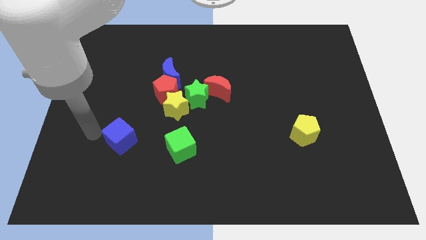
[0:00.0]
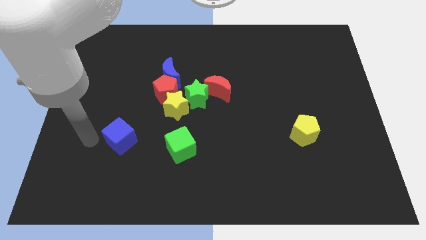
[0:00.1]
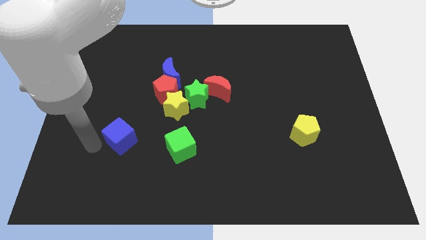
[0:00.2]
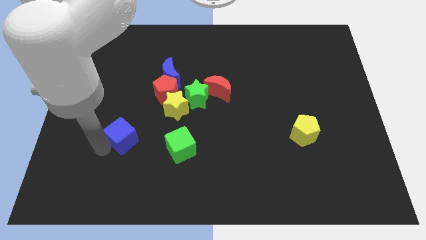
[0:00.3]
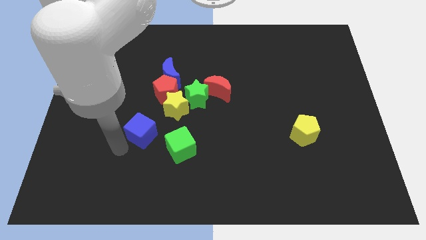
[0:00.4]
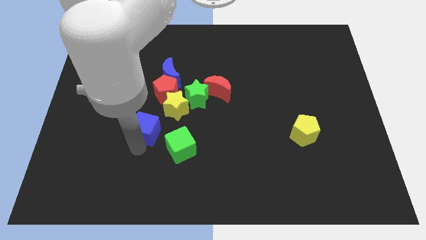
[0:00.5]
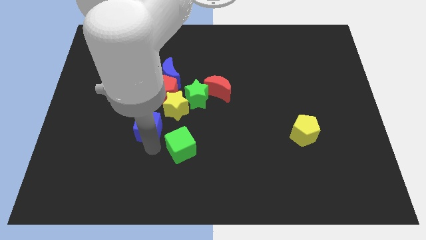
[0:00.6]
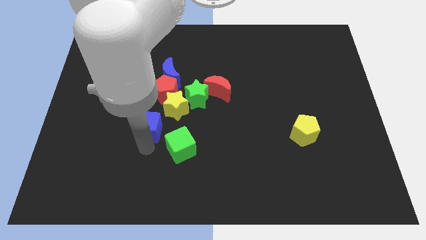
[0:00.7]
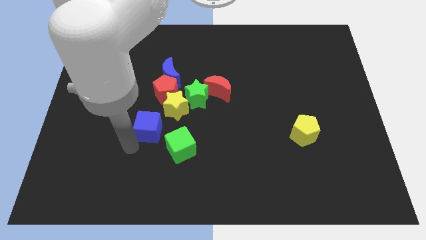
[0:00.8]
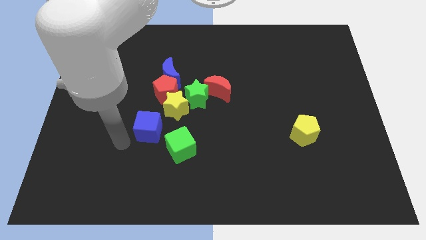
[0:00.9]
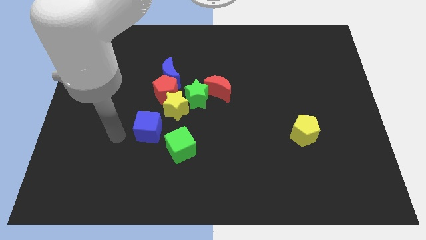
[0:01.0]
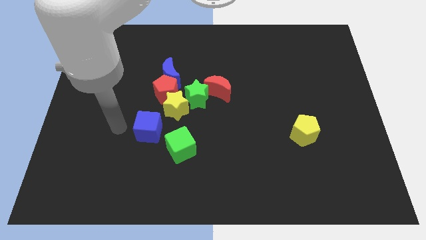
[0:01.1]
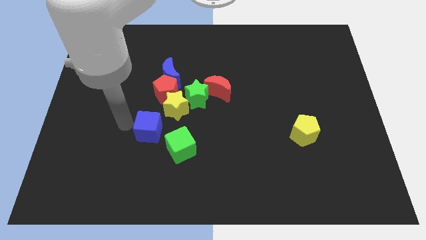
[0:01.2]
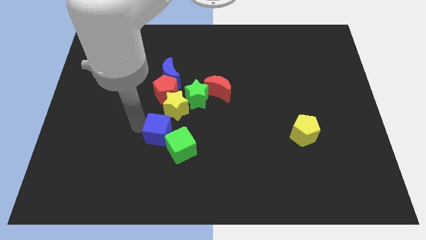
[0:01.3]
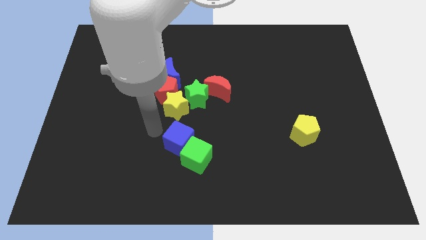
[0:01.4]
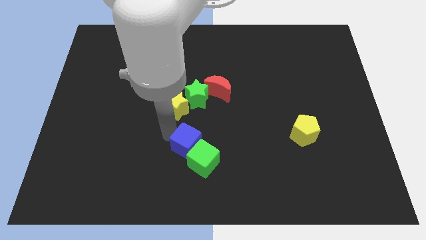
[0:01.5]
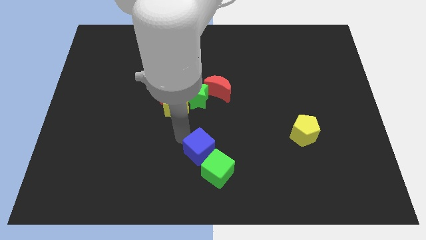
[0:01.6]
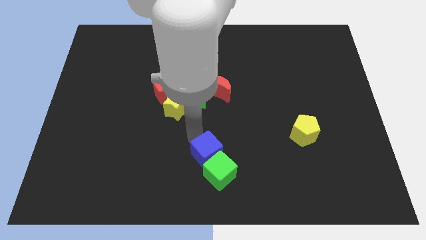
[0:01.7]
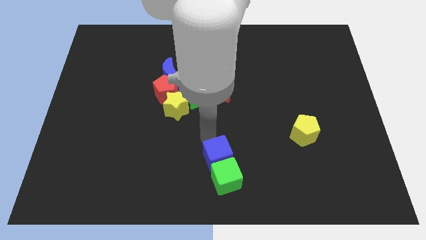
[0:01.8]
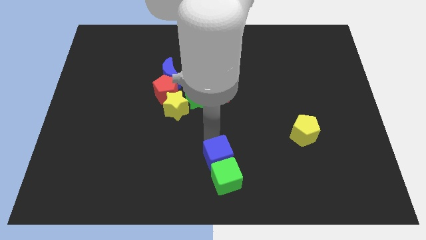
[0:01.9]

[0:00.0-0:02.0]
push the blue cube into the top of the green cube

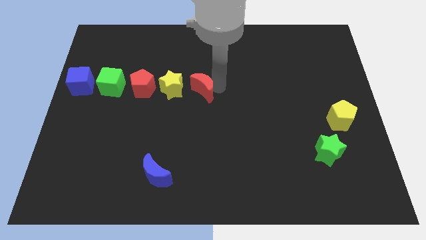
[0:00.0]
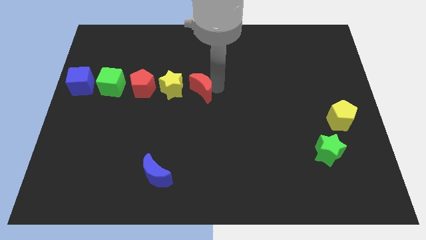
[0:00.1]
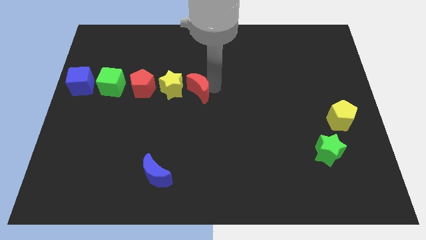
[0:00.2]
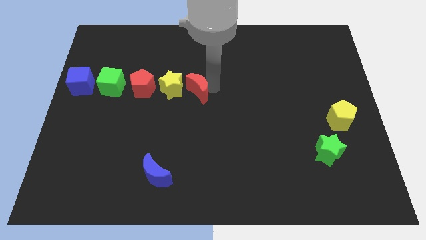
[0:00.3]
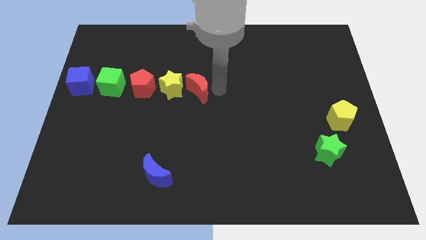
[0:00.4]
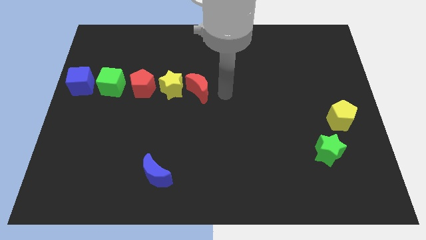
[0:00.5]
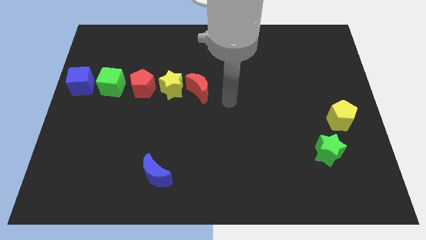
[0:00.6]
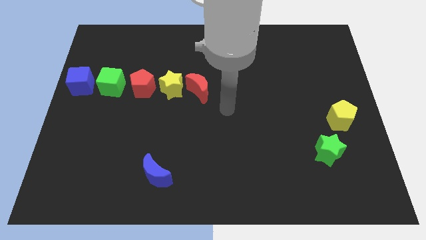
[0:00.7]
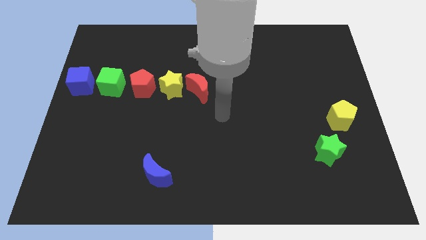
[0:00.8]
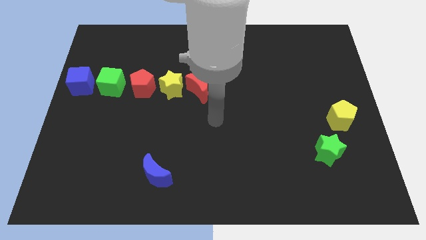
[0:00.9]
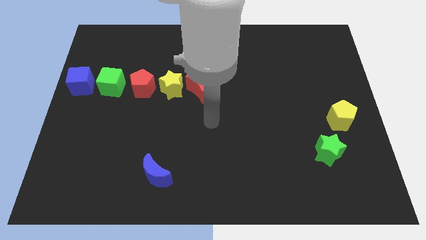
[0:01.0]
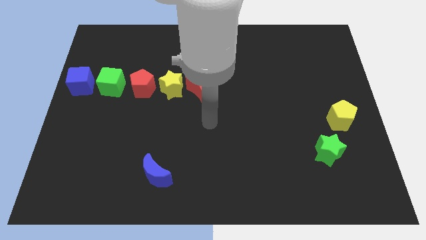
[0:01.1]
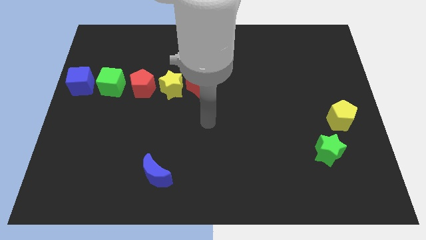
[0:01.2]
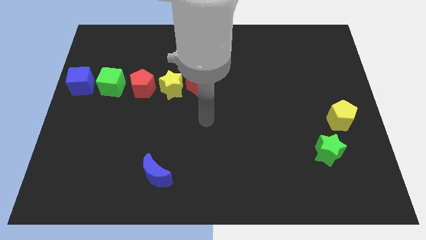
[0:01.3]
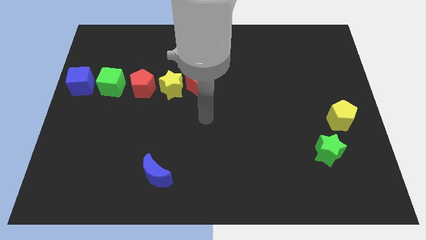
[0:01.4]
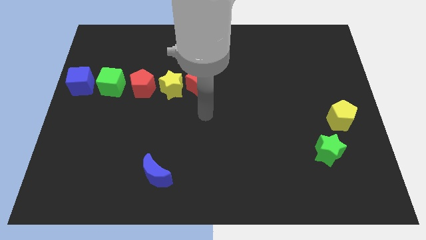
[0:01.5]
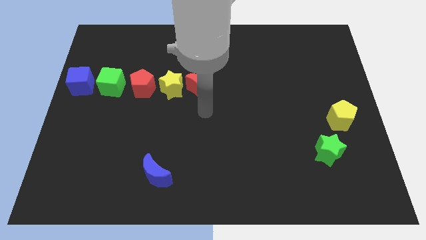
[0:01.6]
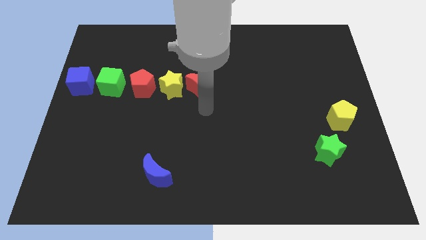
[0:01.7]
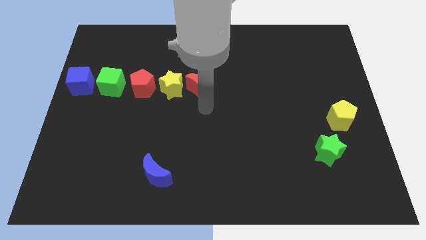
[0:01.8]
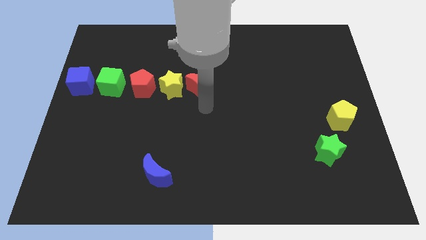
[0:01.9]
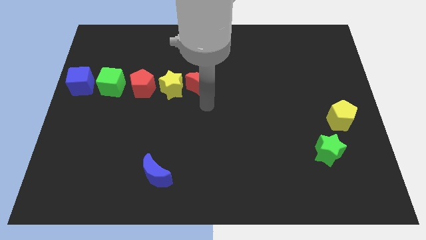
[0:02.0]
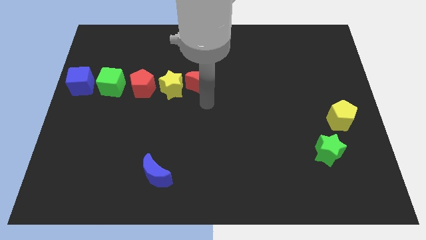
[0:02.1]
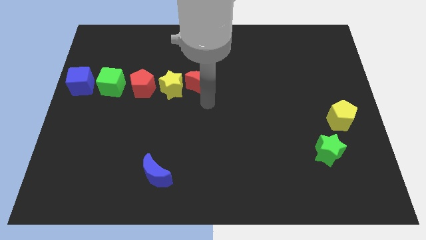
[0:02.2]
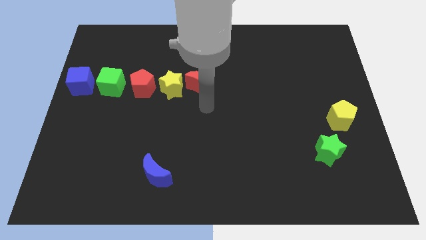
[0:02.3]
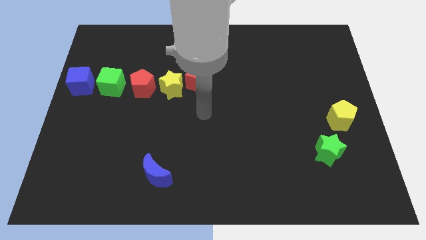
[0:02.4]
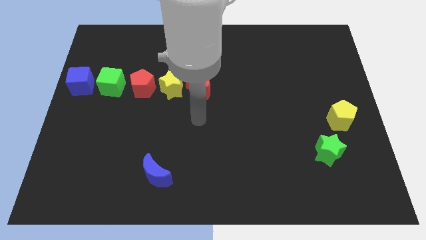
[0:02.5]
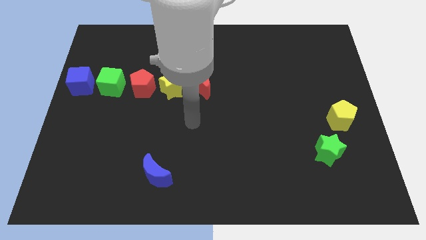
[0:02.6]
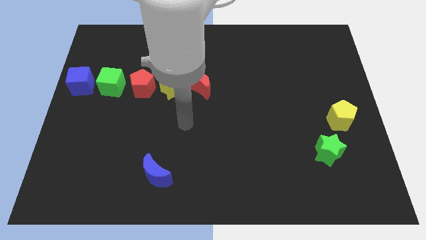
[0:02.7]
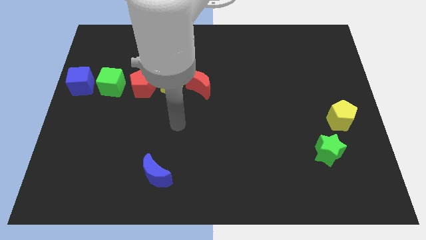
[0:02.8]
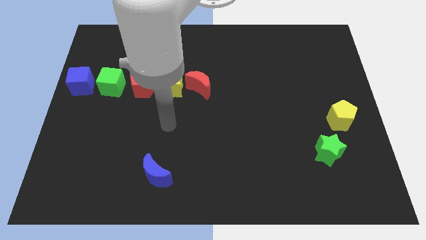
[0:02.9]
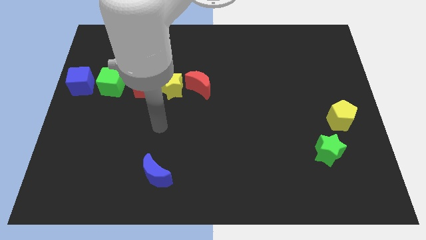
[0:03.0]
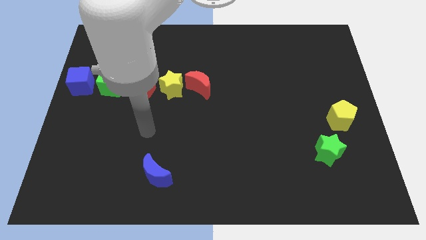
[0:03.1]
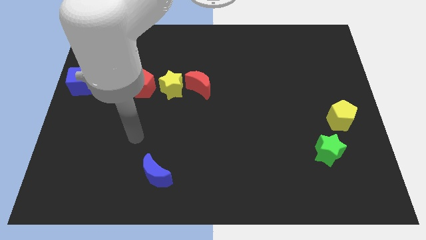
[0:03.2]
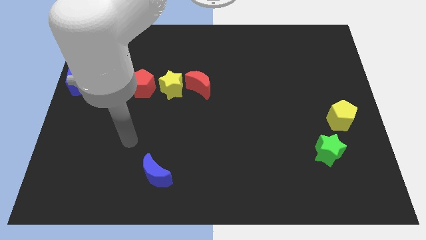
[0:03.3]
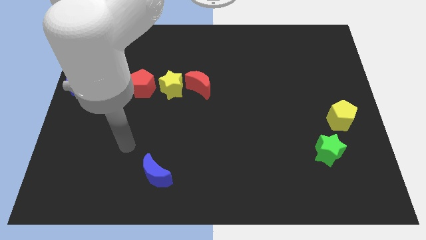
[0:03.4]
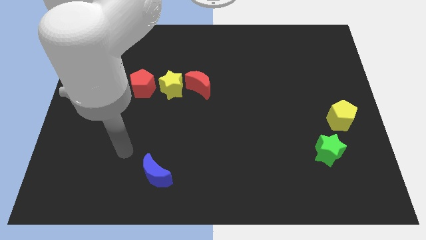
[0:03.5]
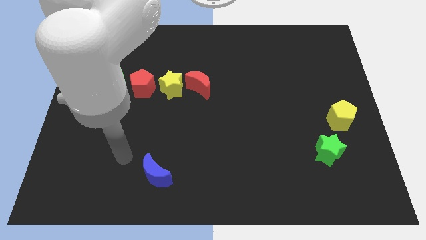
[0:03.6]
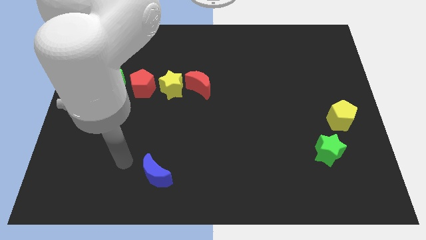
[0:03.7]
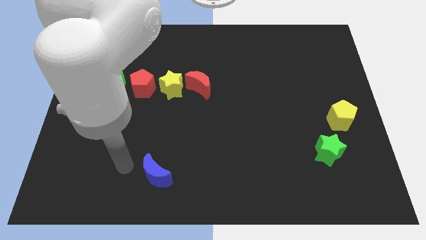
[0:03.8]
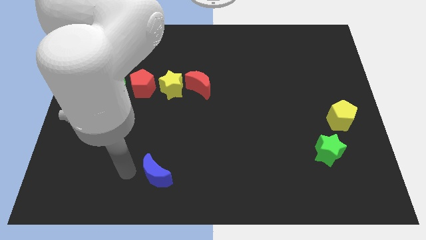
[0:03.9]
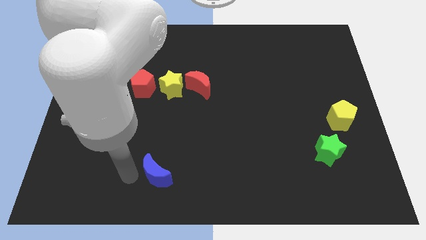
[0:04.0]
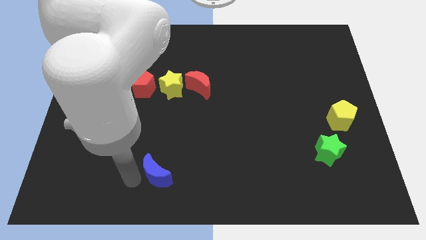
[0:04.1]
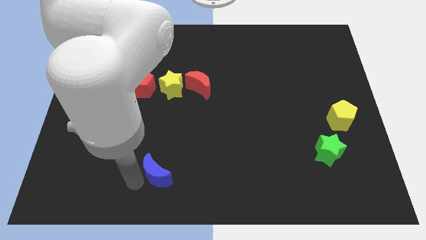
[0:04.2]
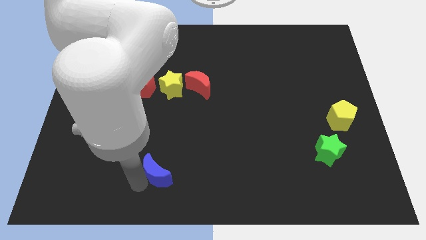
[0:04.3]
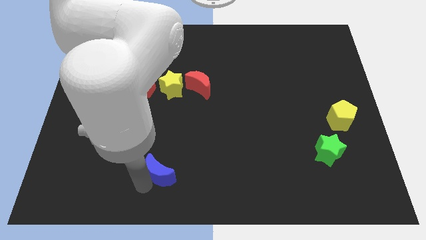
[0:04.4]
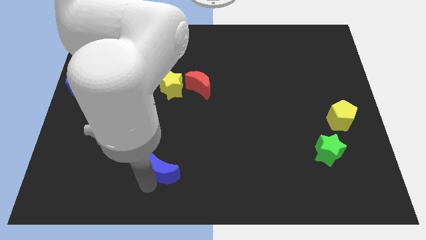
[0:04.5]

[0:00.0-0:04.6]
touch the bottom of the blue crescent

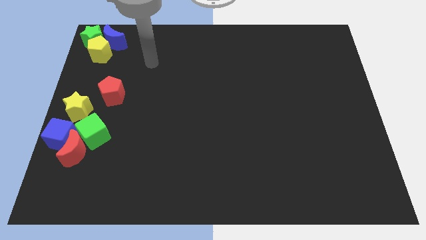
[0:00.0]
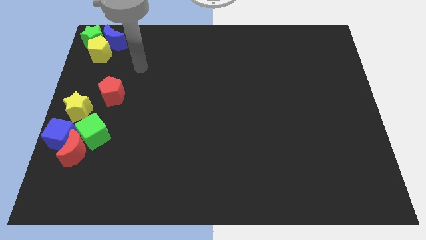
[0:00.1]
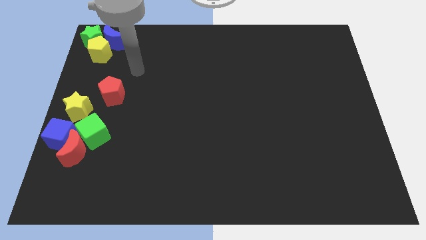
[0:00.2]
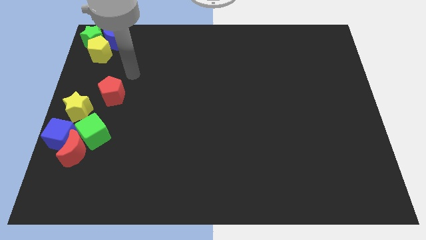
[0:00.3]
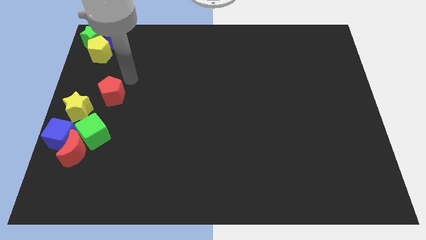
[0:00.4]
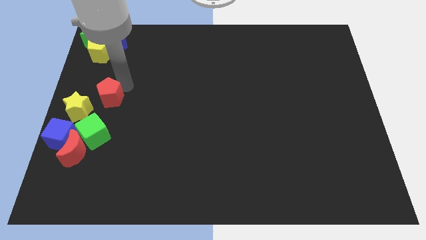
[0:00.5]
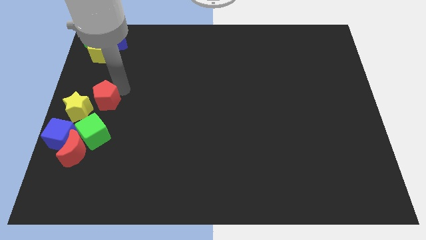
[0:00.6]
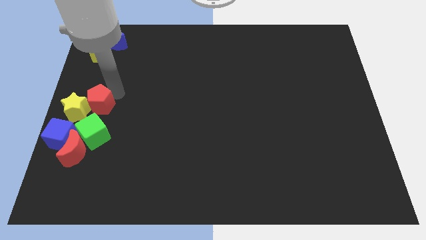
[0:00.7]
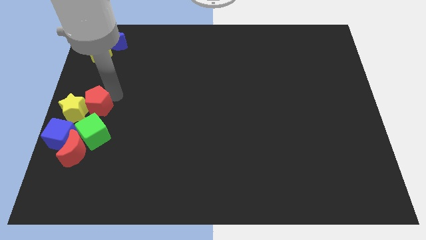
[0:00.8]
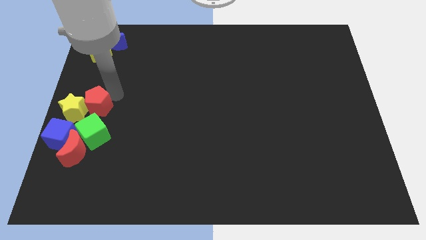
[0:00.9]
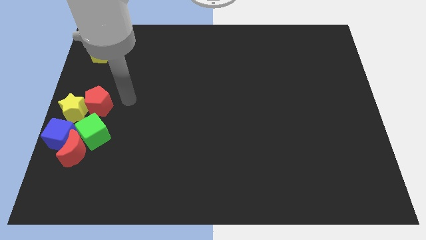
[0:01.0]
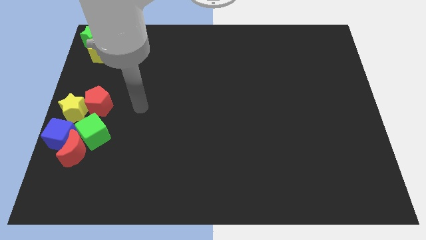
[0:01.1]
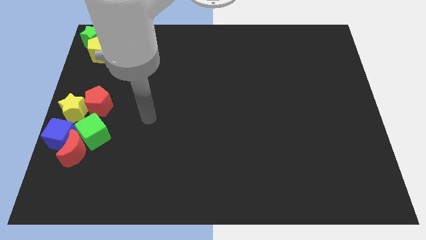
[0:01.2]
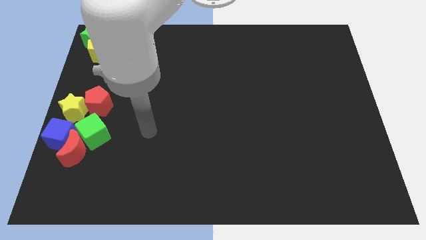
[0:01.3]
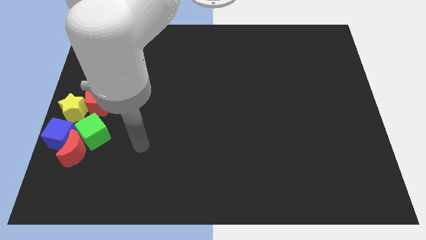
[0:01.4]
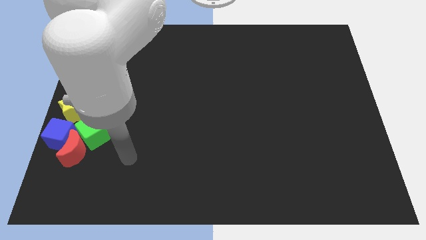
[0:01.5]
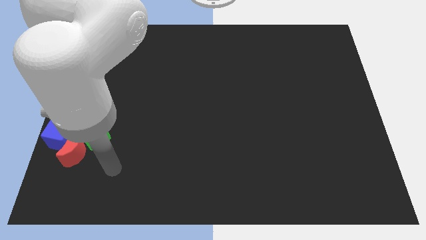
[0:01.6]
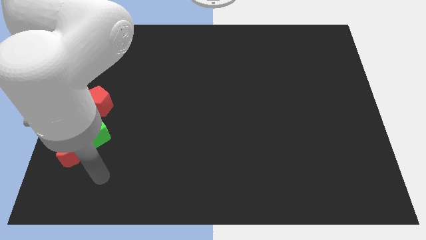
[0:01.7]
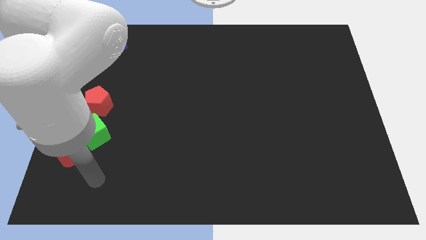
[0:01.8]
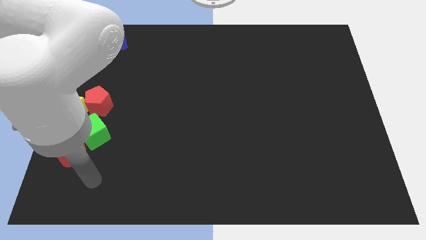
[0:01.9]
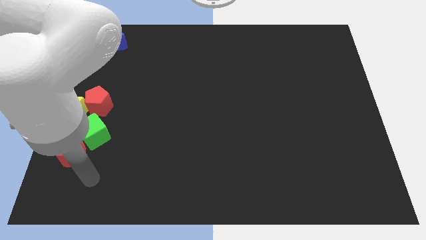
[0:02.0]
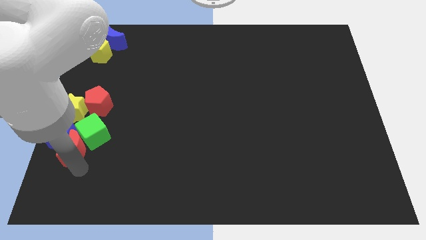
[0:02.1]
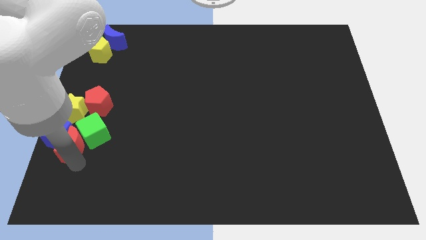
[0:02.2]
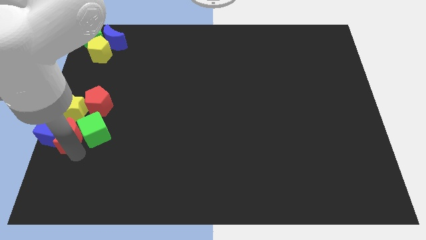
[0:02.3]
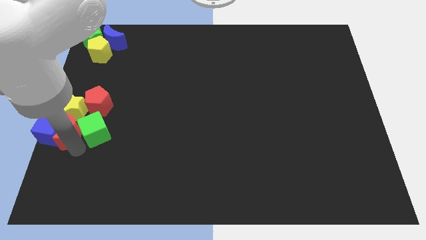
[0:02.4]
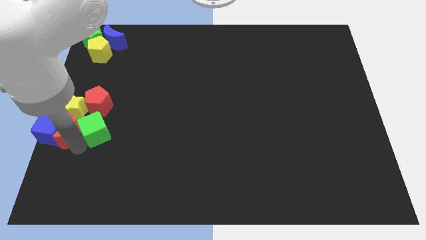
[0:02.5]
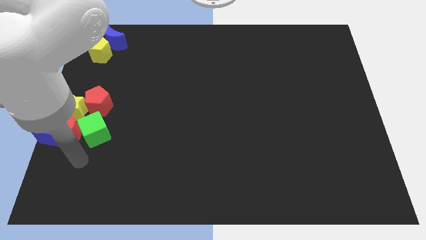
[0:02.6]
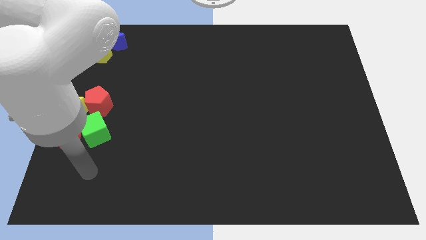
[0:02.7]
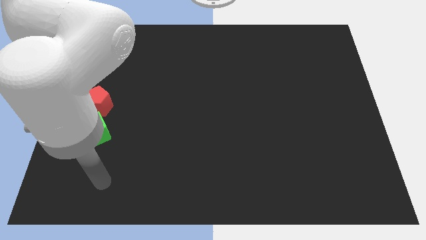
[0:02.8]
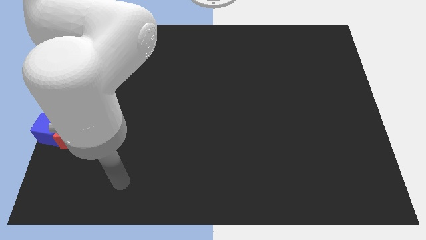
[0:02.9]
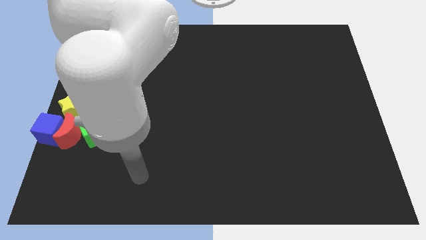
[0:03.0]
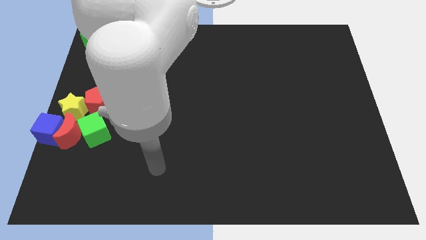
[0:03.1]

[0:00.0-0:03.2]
push the red pentagon and red crescent into the group of blocks
